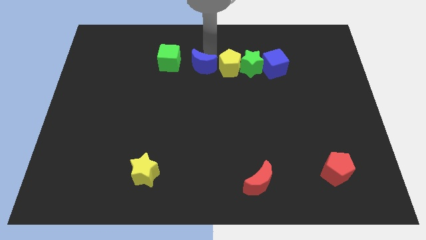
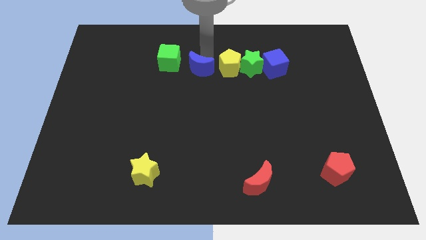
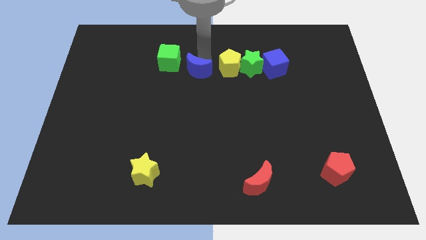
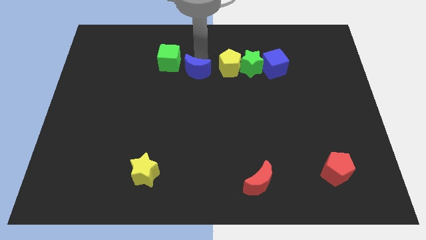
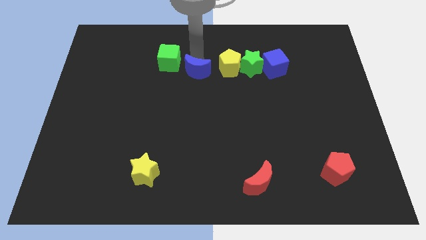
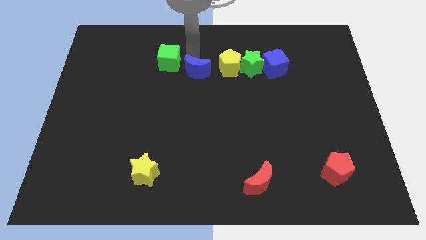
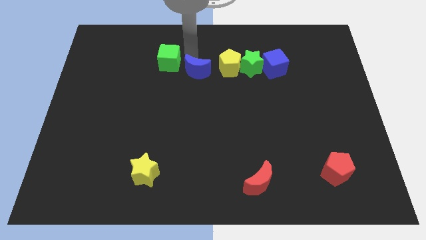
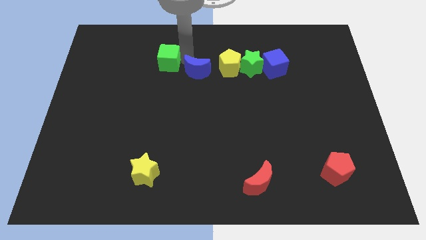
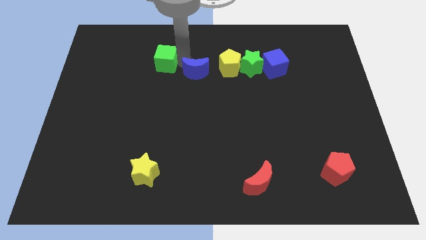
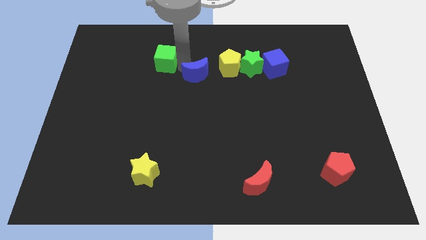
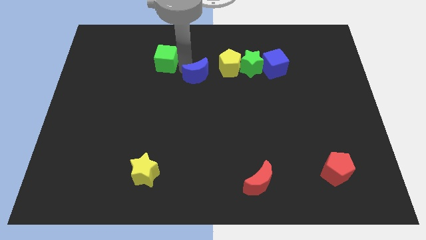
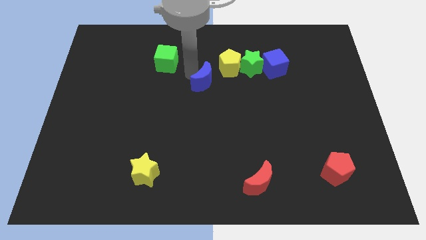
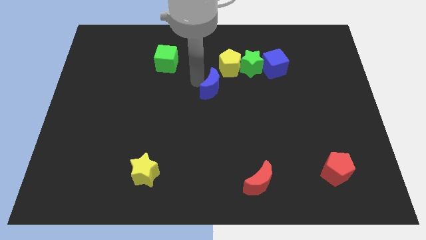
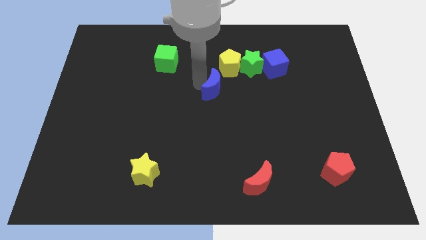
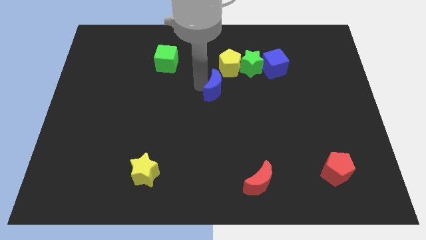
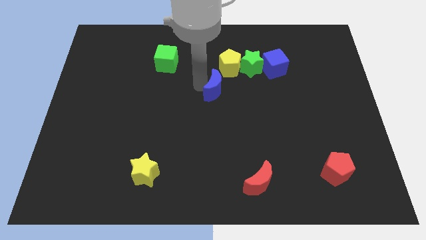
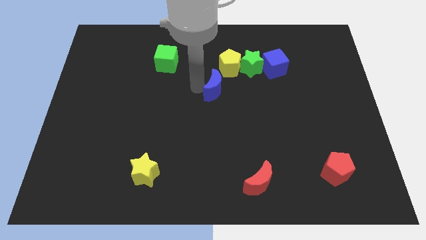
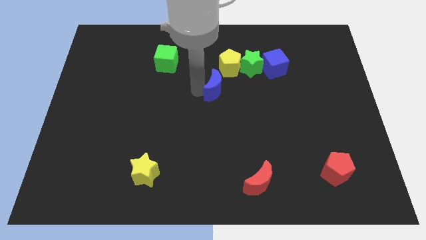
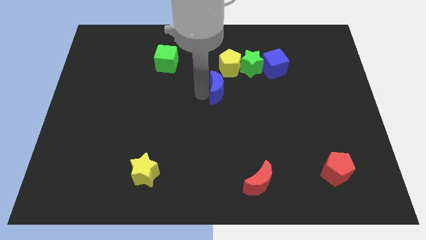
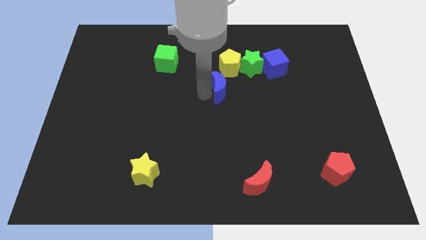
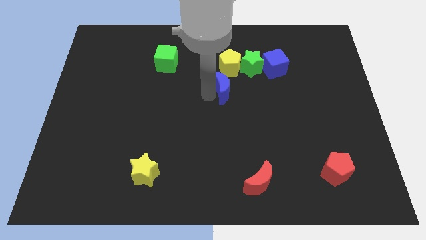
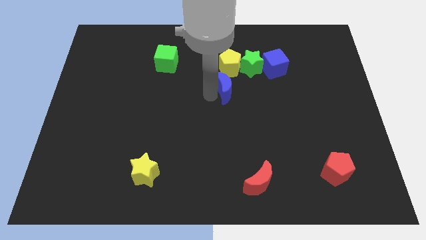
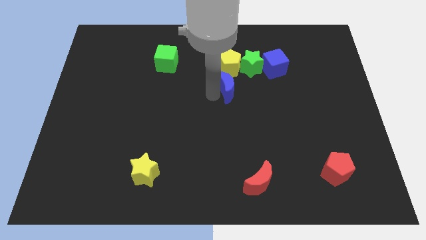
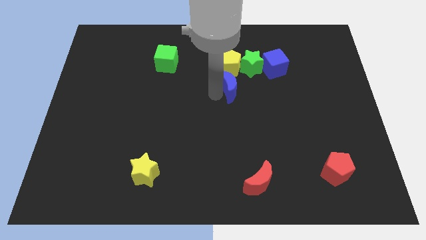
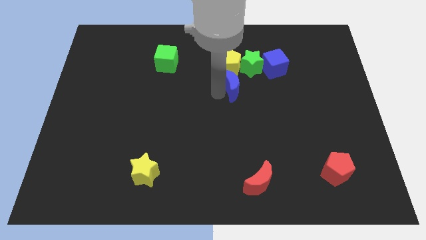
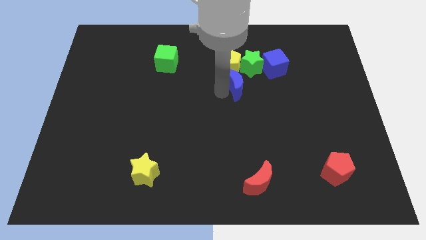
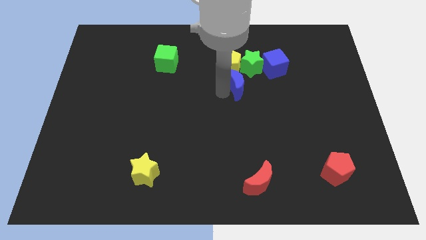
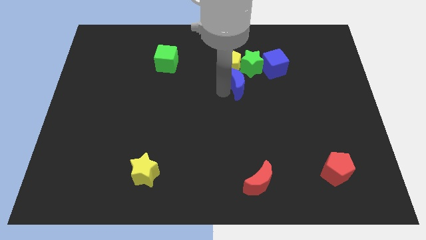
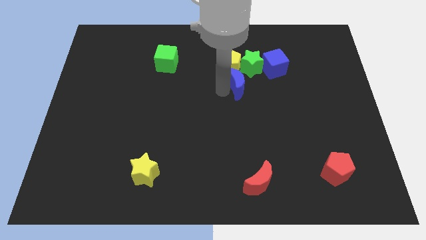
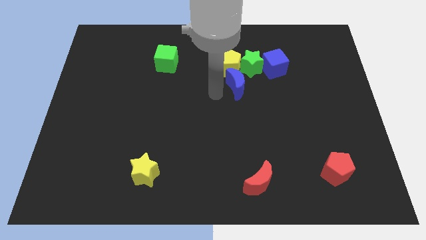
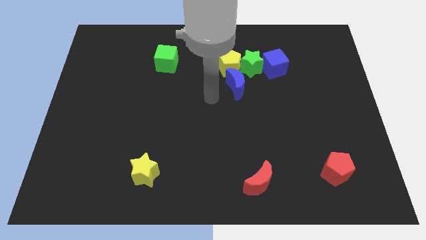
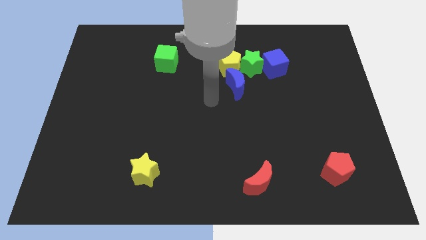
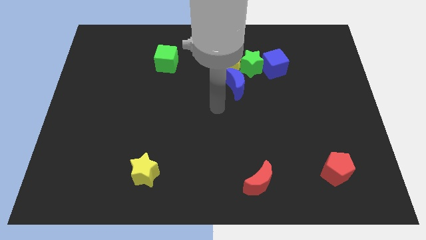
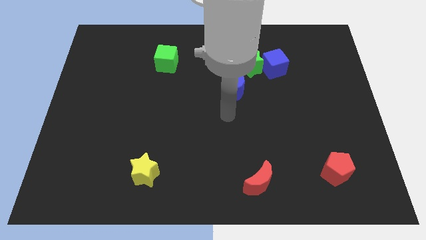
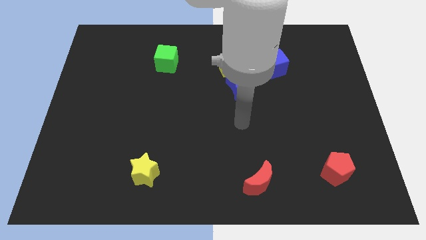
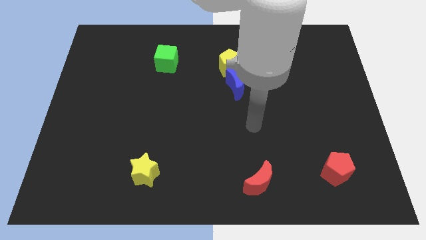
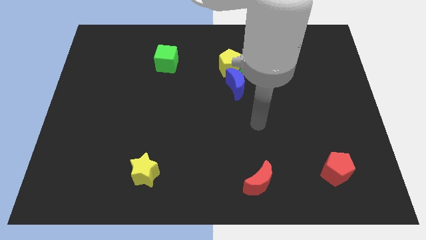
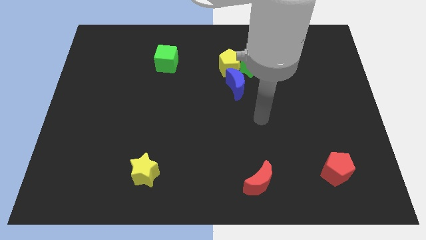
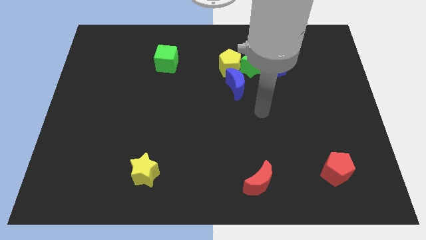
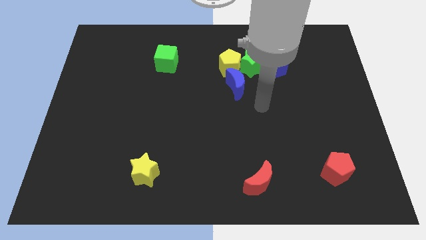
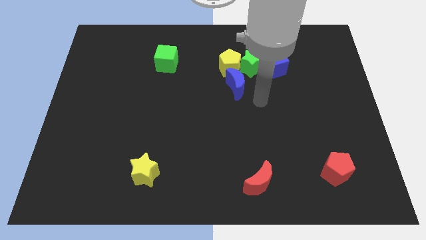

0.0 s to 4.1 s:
move the blue crescent to the bottom of the yellow pentagon

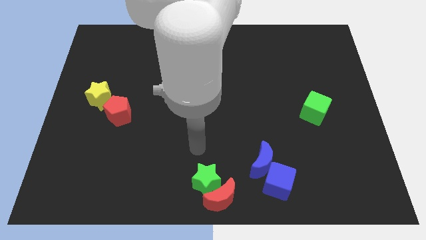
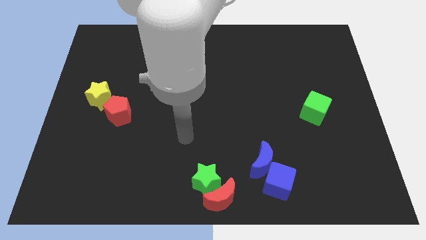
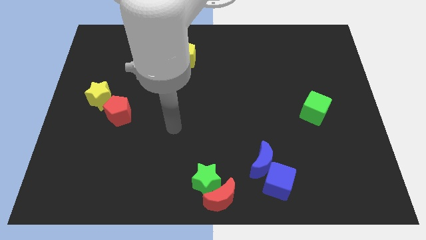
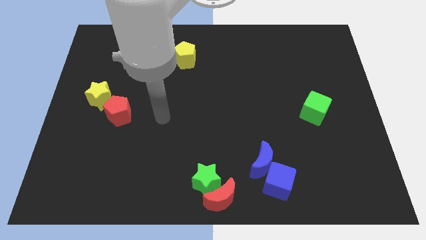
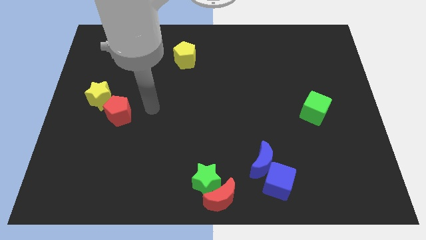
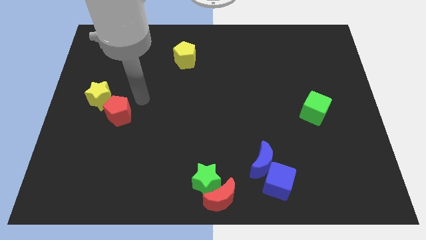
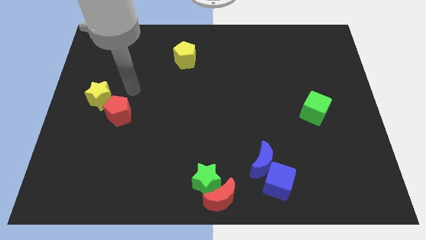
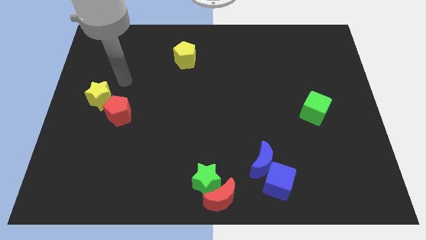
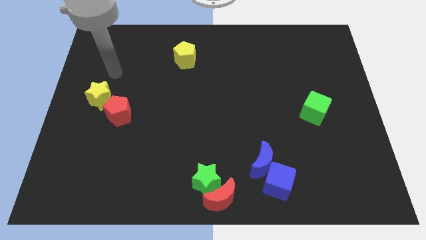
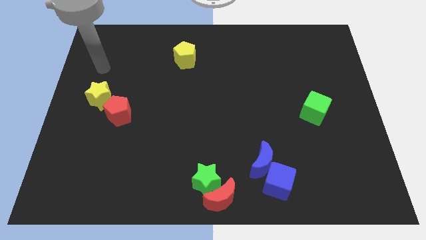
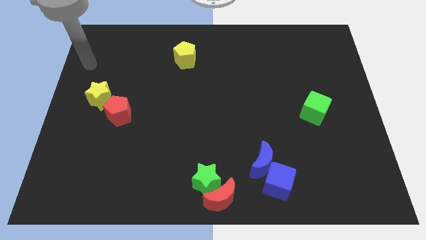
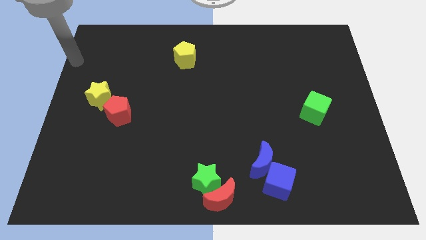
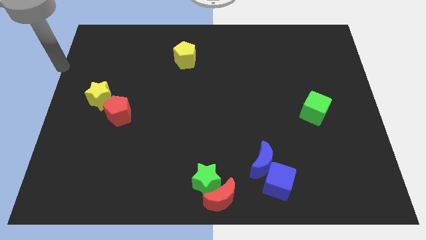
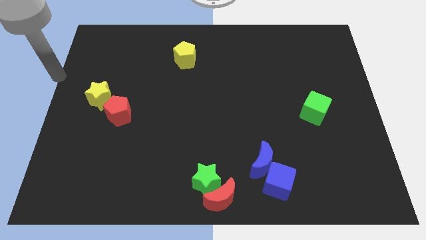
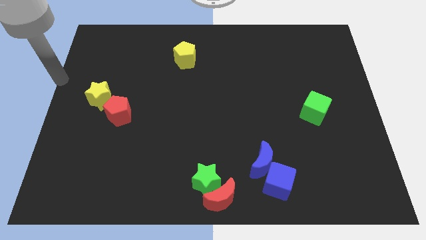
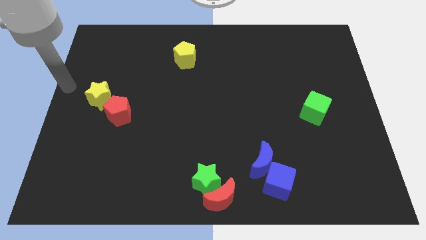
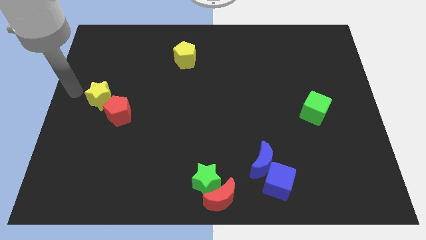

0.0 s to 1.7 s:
move the arm towards the left side of the yellow star

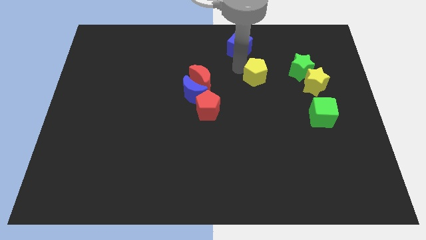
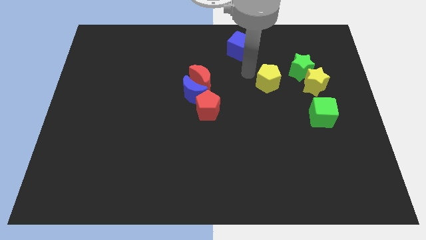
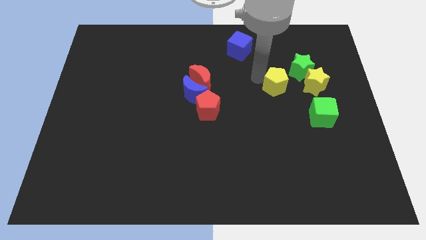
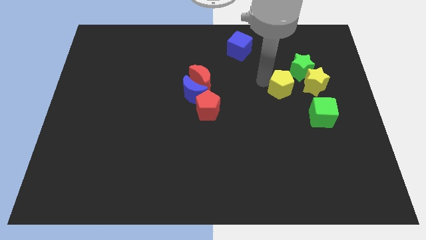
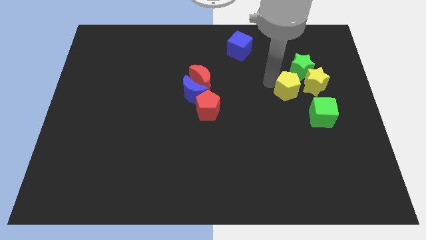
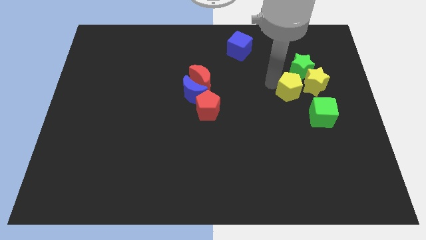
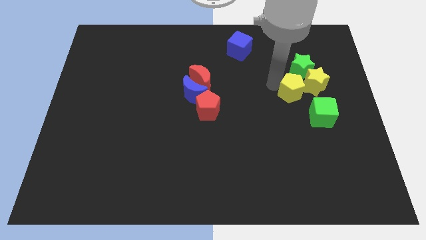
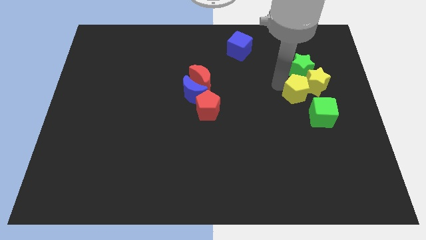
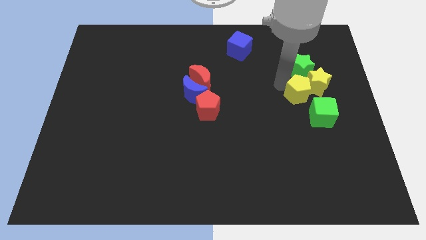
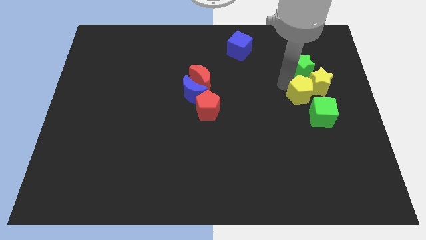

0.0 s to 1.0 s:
place yellow pentagon to the left of yellow star

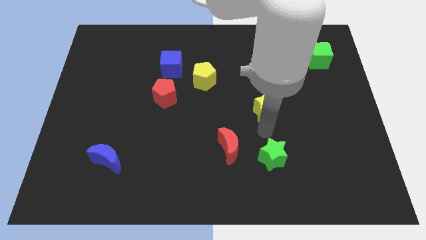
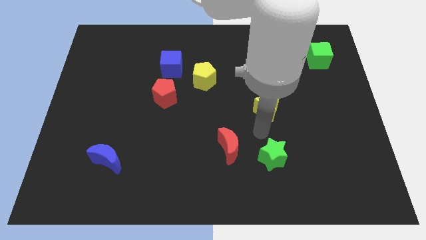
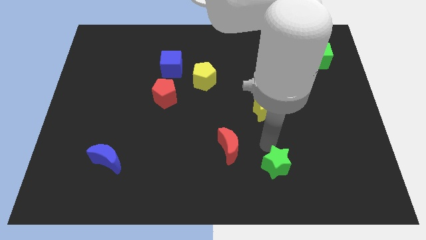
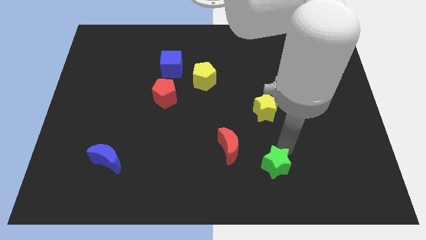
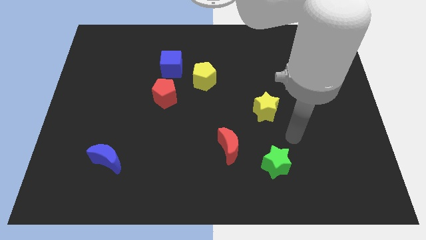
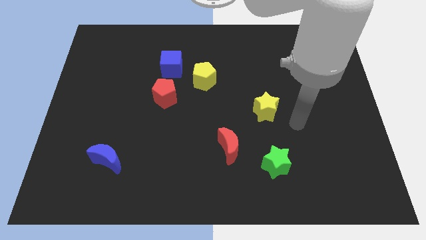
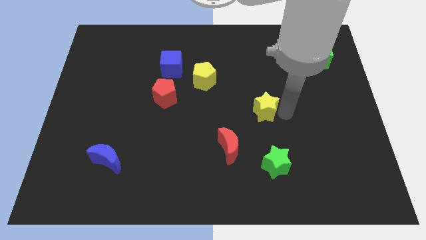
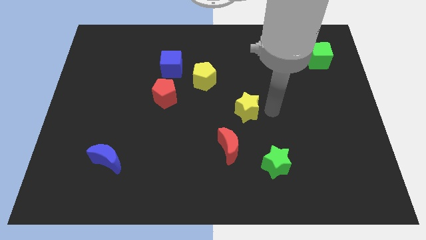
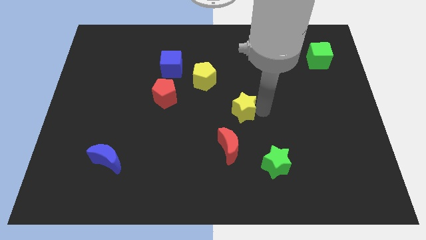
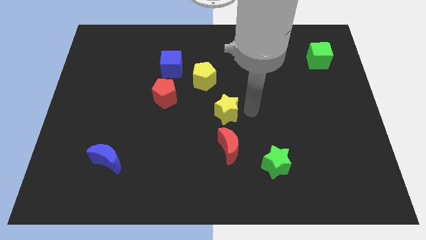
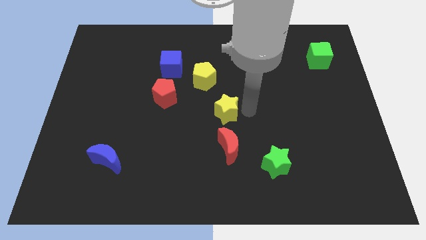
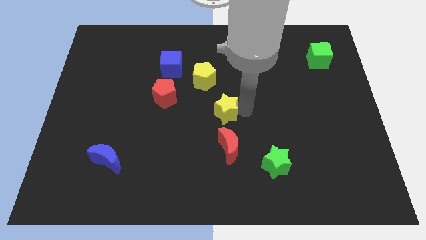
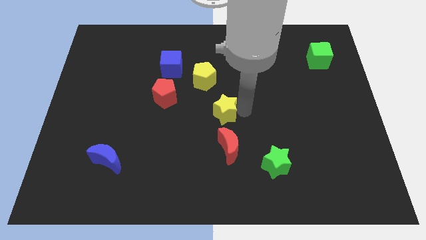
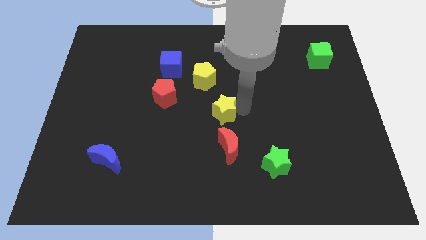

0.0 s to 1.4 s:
place yellow star to the top of red moon

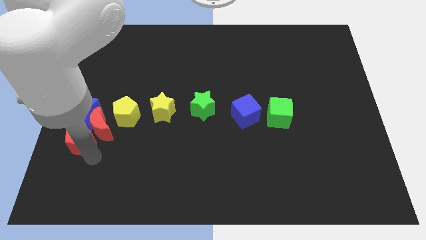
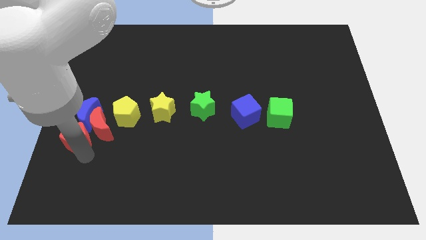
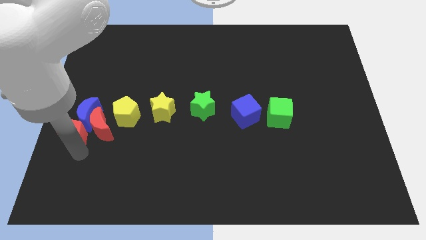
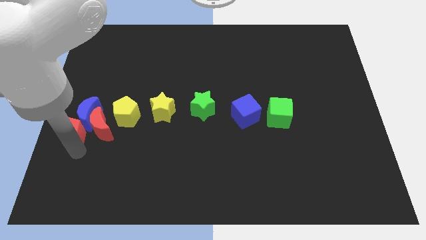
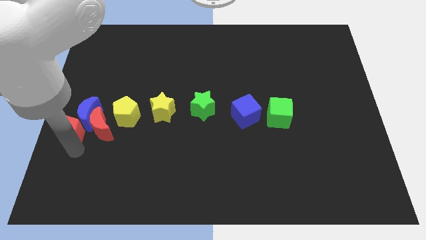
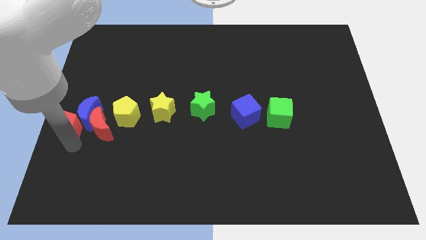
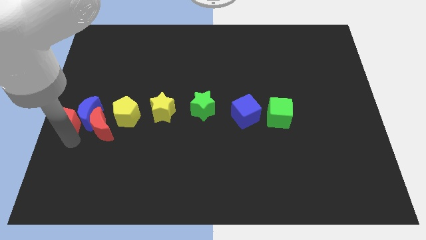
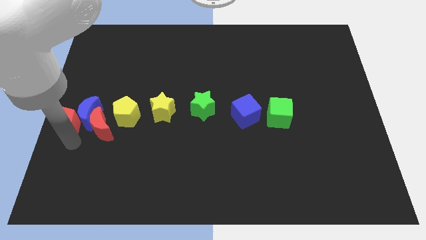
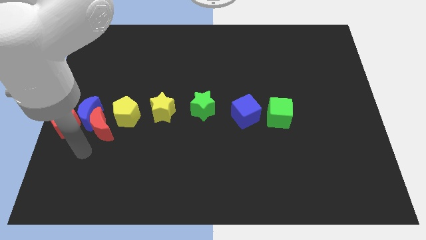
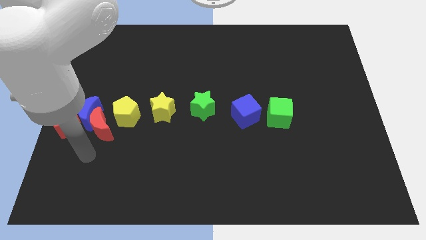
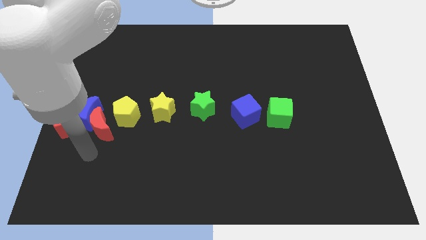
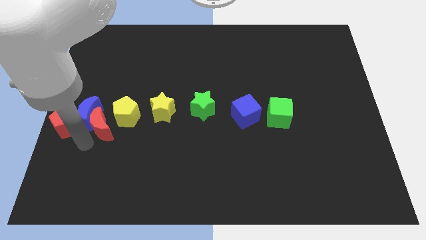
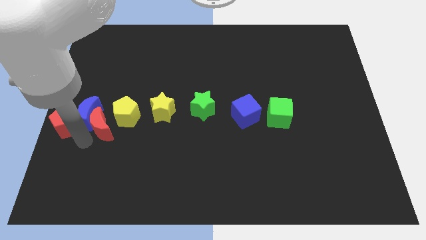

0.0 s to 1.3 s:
move the red pentagon slightly up
